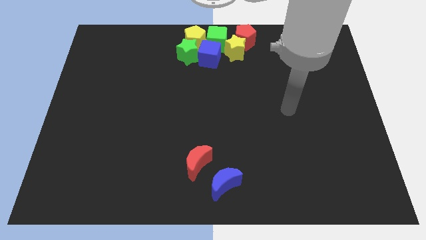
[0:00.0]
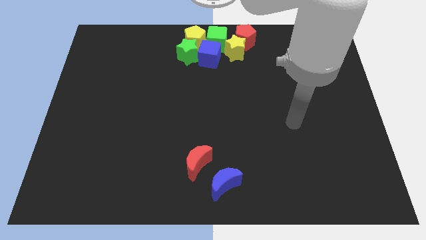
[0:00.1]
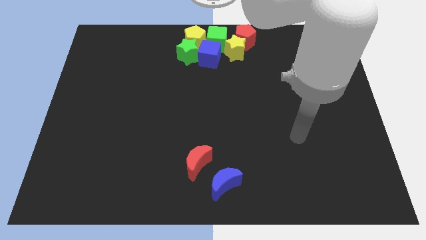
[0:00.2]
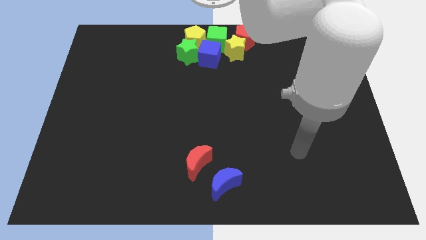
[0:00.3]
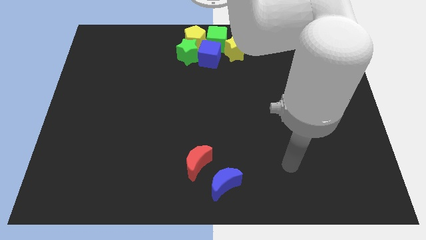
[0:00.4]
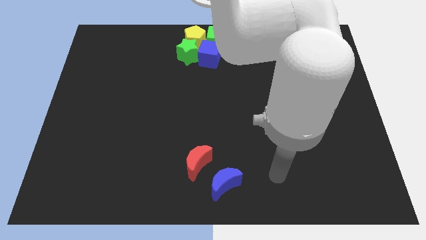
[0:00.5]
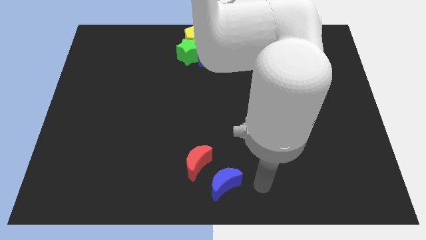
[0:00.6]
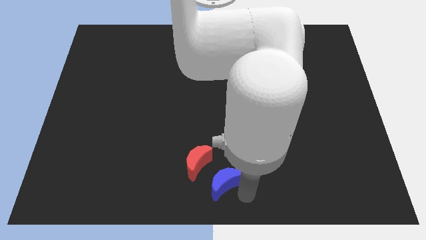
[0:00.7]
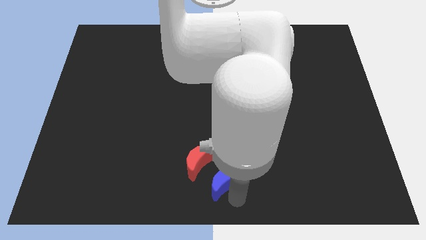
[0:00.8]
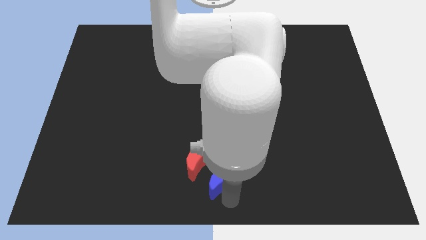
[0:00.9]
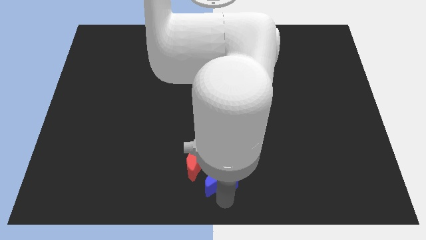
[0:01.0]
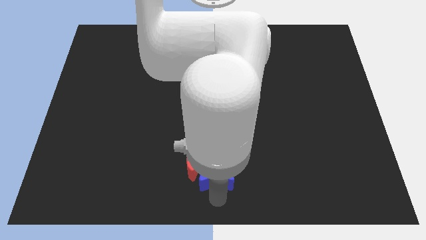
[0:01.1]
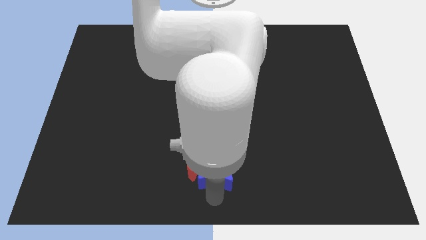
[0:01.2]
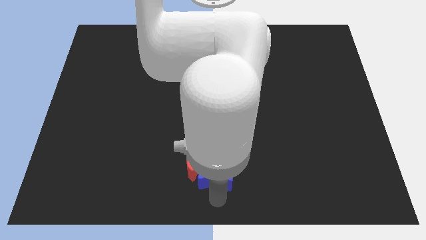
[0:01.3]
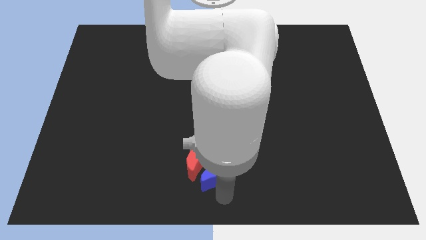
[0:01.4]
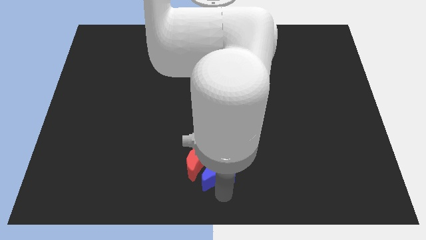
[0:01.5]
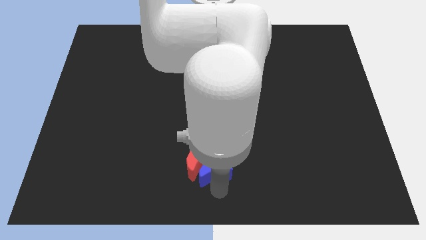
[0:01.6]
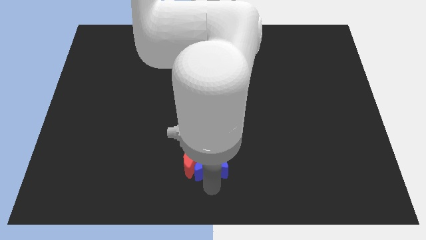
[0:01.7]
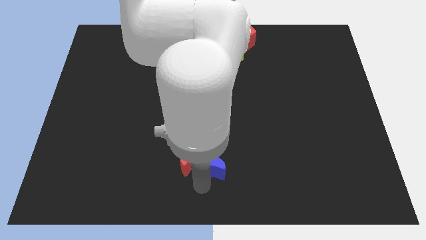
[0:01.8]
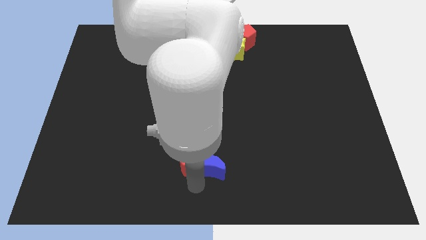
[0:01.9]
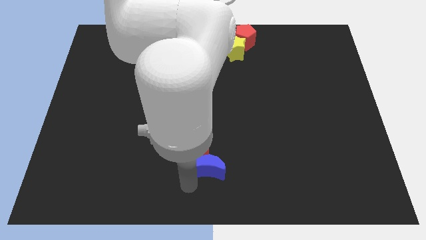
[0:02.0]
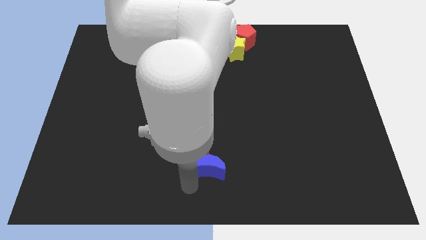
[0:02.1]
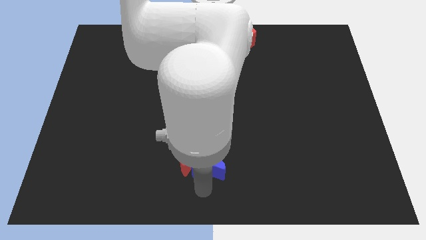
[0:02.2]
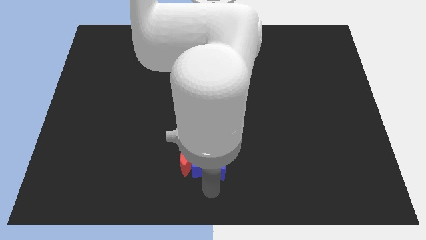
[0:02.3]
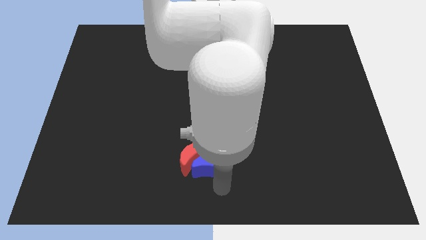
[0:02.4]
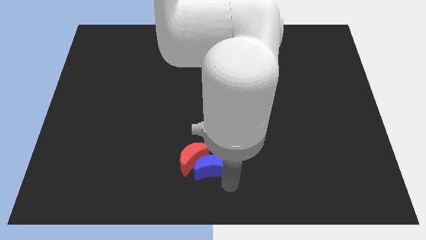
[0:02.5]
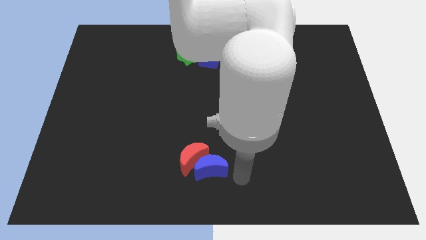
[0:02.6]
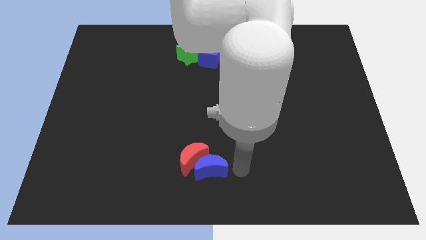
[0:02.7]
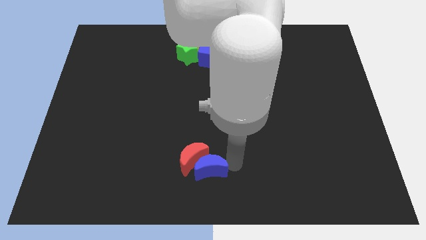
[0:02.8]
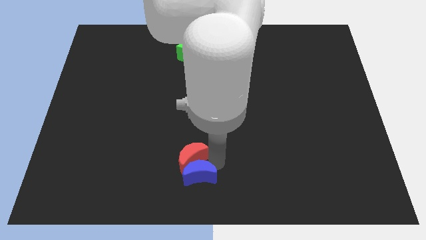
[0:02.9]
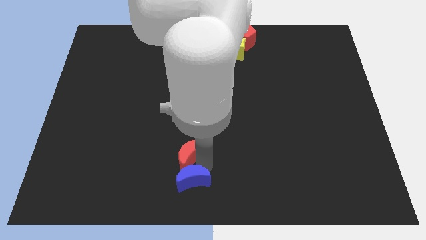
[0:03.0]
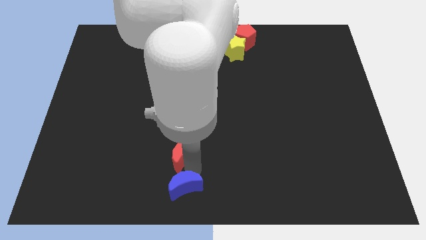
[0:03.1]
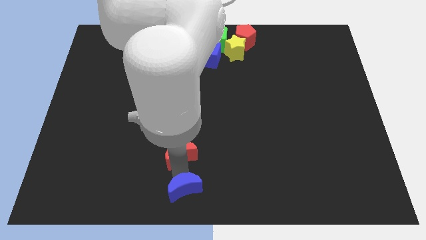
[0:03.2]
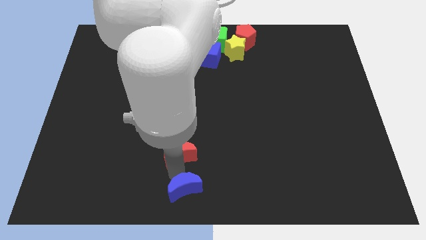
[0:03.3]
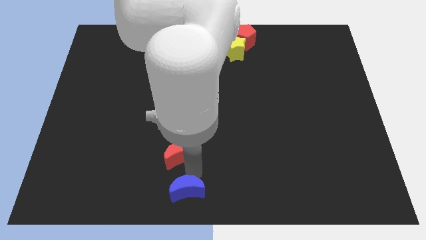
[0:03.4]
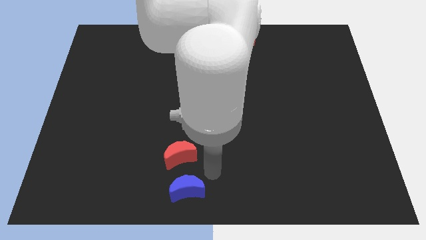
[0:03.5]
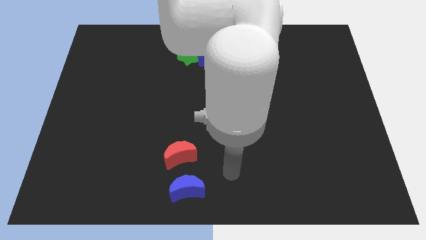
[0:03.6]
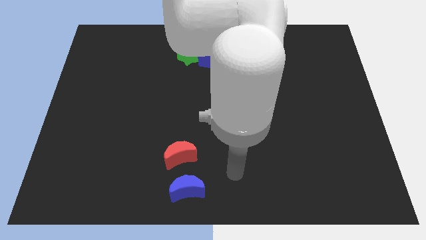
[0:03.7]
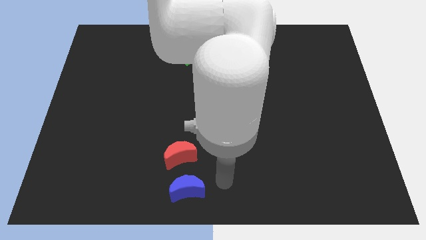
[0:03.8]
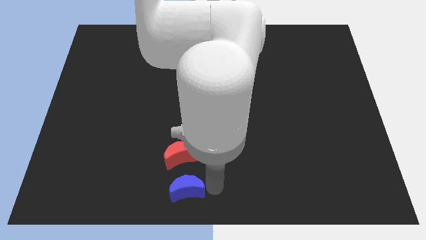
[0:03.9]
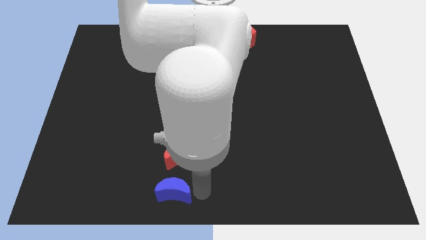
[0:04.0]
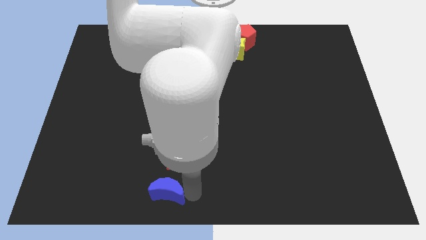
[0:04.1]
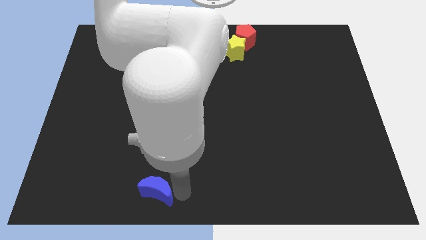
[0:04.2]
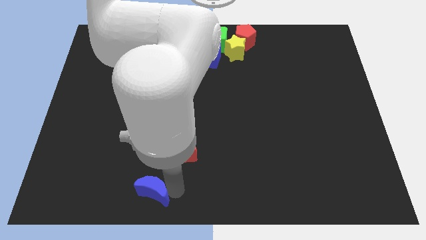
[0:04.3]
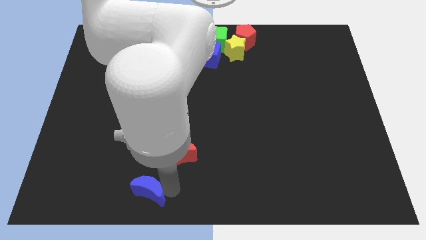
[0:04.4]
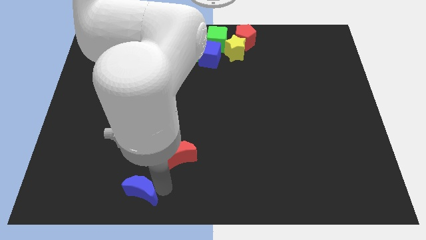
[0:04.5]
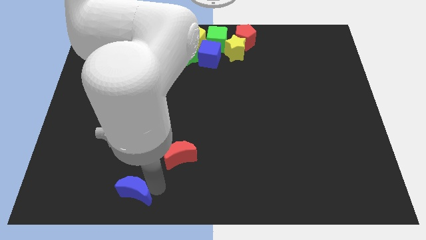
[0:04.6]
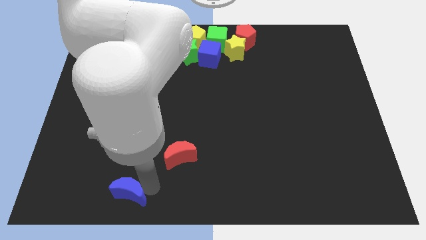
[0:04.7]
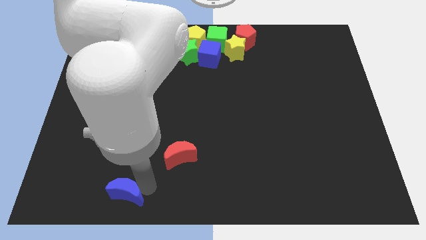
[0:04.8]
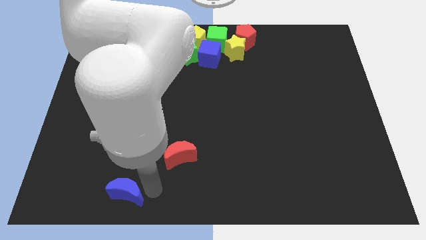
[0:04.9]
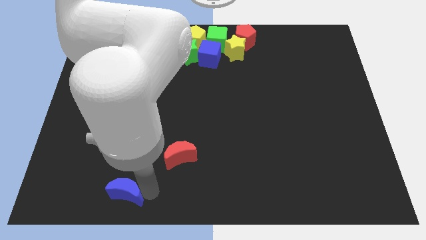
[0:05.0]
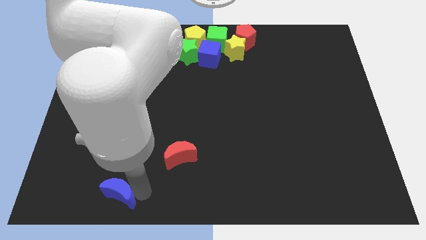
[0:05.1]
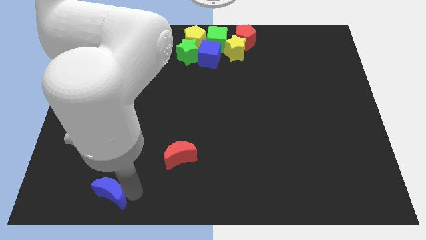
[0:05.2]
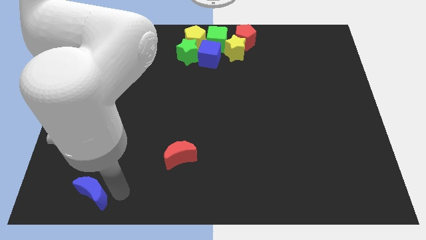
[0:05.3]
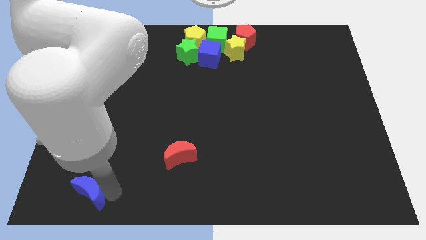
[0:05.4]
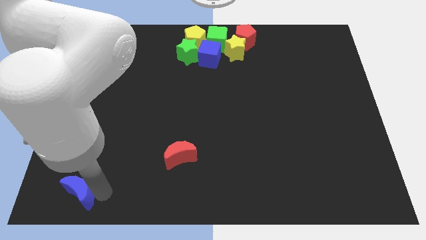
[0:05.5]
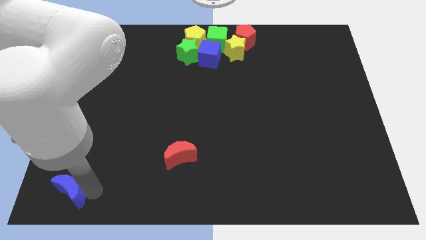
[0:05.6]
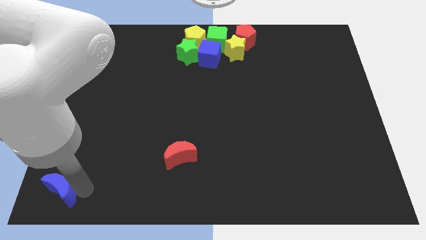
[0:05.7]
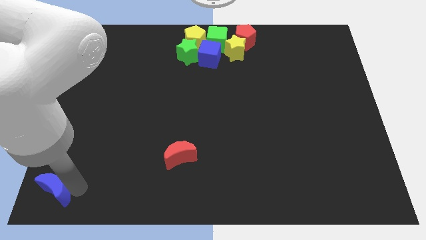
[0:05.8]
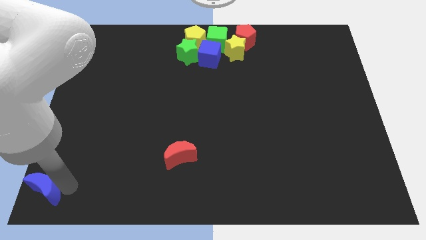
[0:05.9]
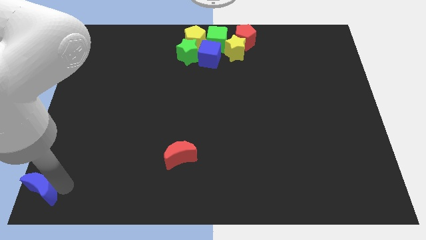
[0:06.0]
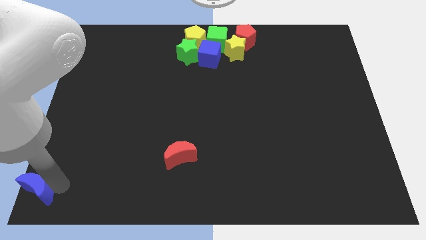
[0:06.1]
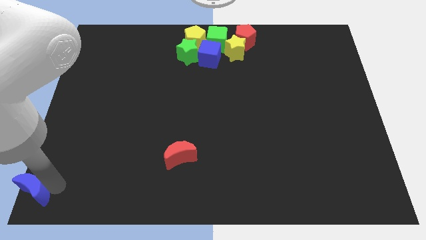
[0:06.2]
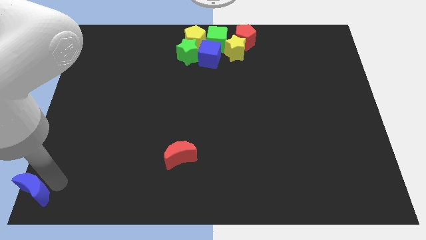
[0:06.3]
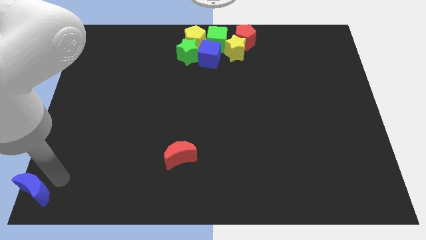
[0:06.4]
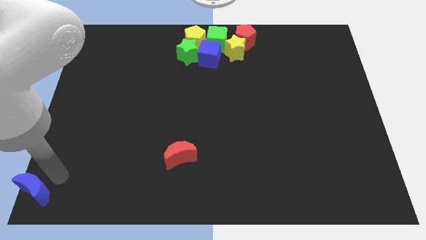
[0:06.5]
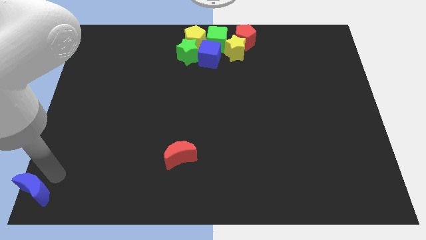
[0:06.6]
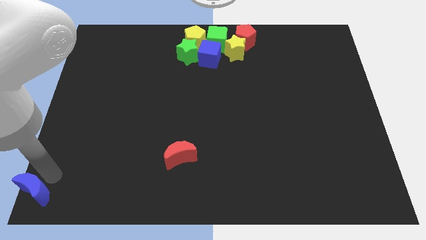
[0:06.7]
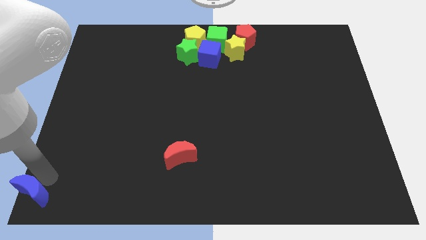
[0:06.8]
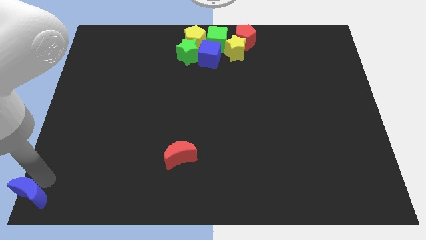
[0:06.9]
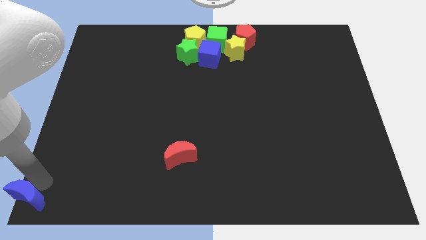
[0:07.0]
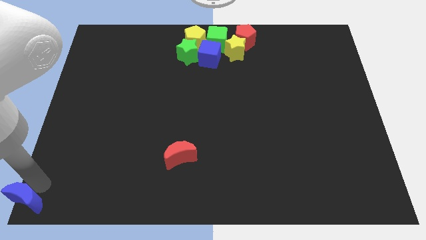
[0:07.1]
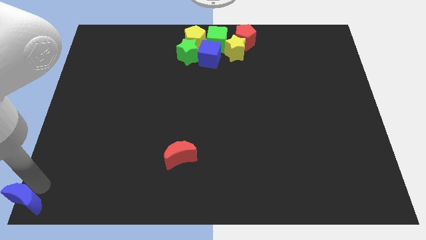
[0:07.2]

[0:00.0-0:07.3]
push the blue crescent towards the bottom left

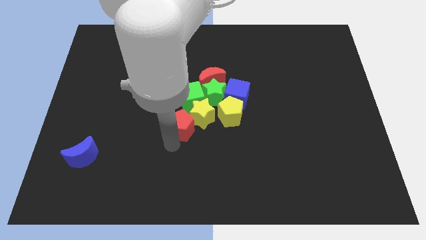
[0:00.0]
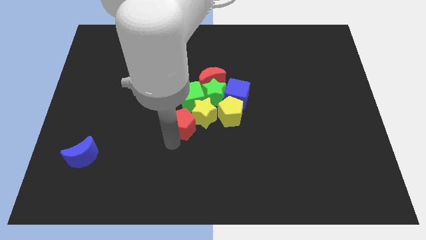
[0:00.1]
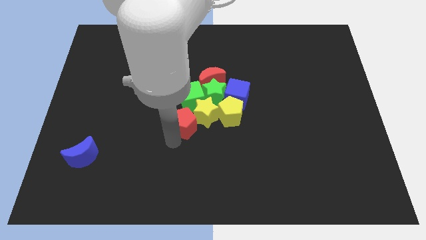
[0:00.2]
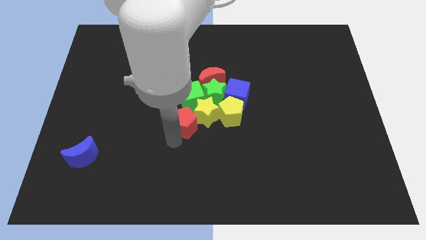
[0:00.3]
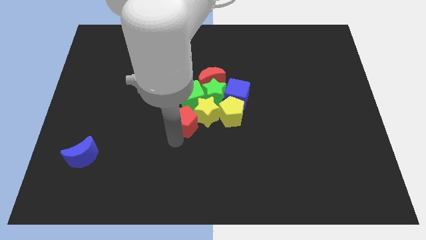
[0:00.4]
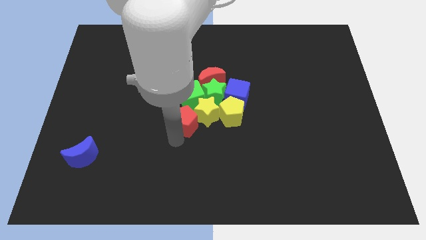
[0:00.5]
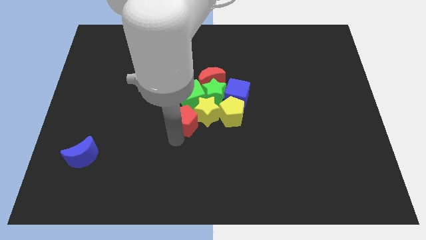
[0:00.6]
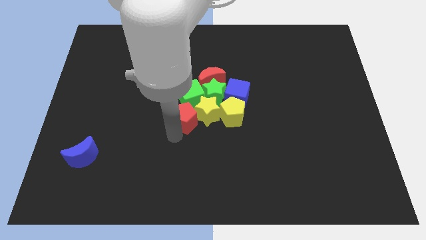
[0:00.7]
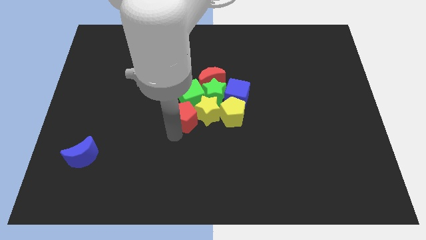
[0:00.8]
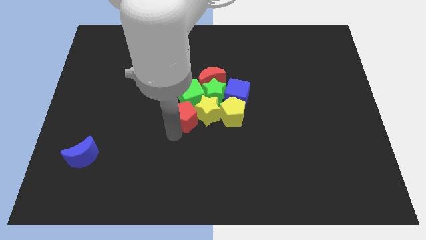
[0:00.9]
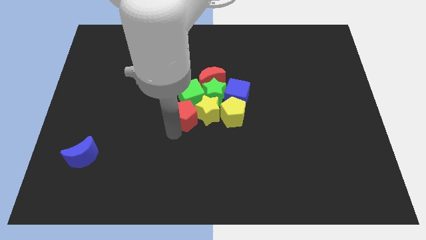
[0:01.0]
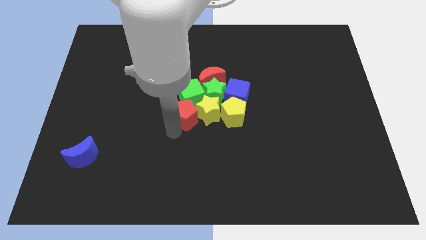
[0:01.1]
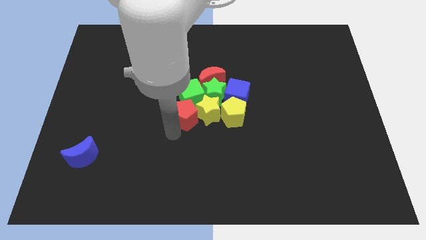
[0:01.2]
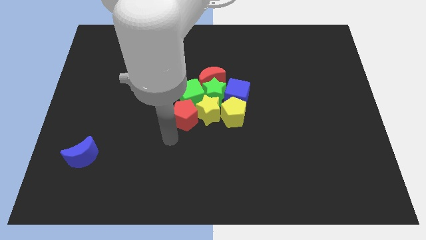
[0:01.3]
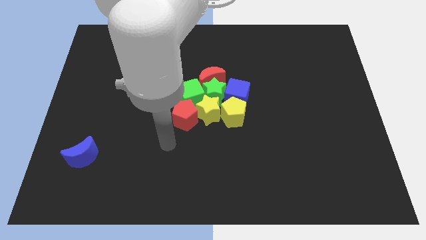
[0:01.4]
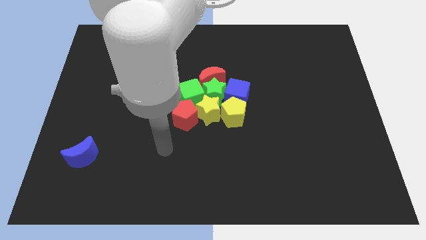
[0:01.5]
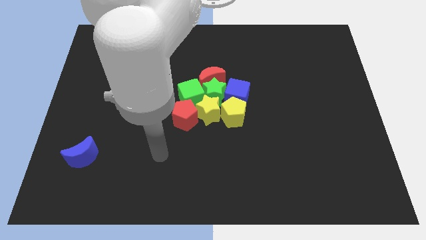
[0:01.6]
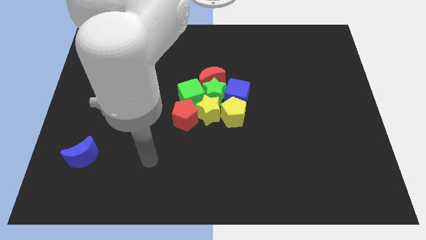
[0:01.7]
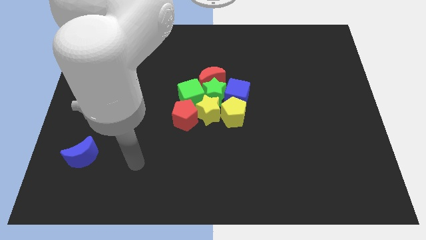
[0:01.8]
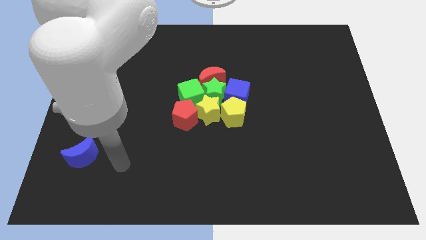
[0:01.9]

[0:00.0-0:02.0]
push red pentagon into the yellow star and green cube
